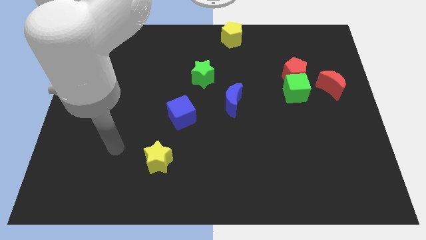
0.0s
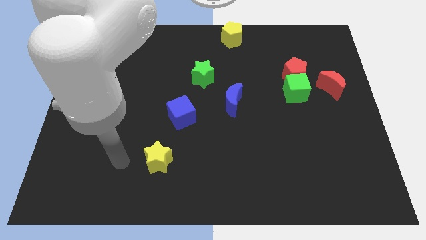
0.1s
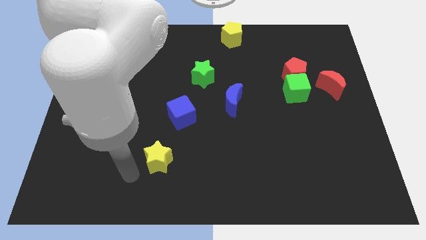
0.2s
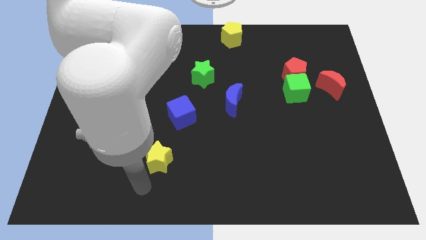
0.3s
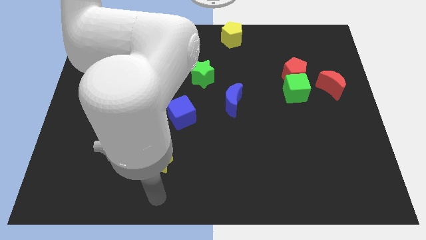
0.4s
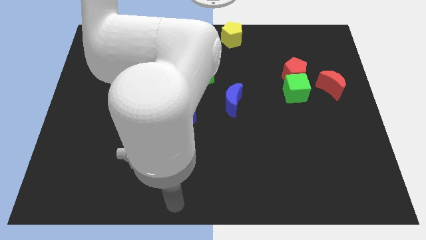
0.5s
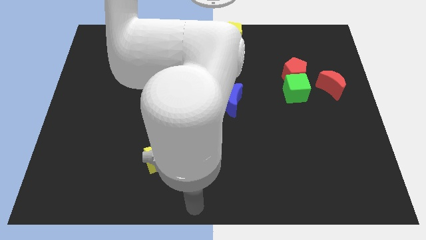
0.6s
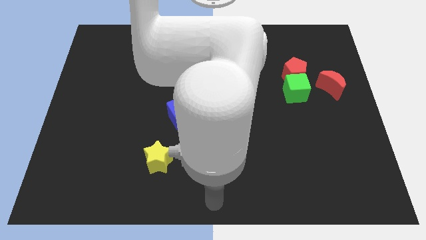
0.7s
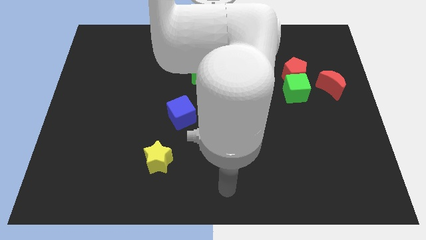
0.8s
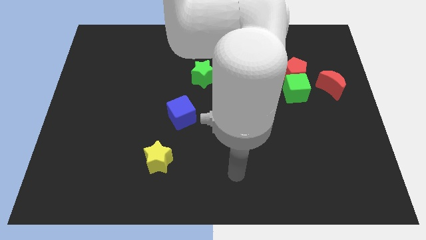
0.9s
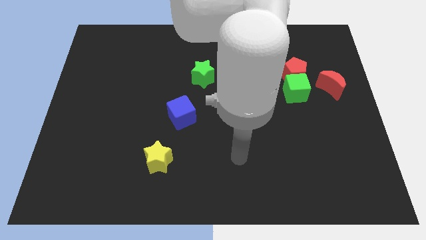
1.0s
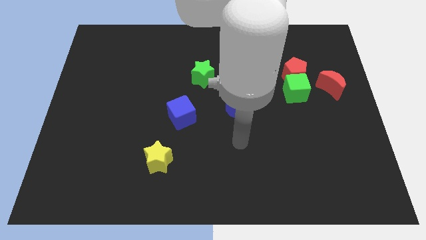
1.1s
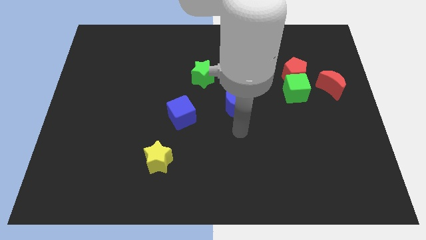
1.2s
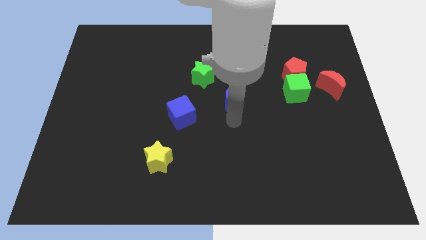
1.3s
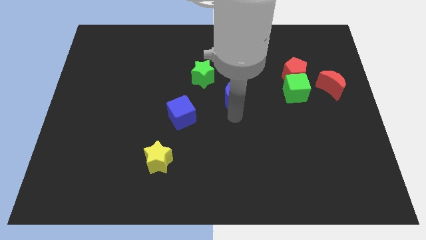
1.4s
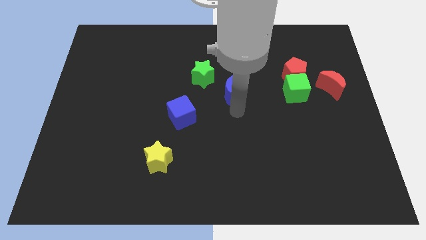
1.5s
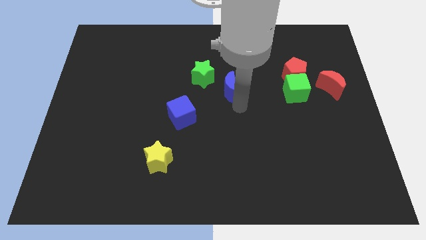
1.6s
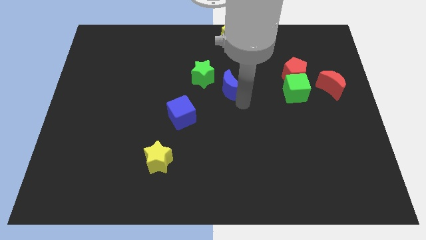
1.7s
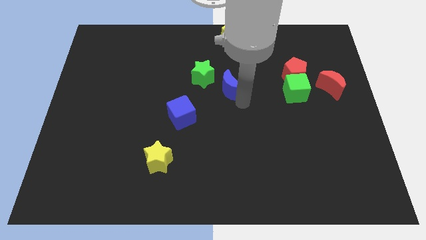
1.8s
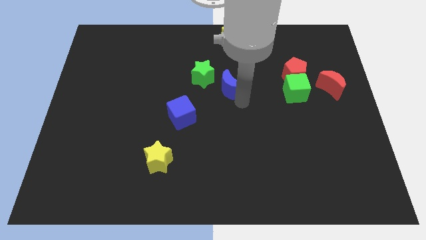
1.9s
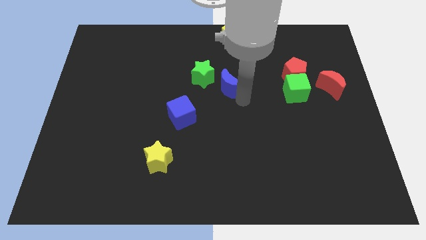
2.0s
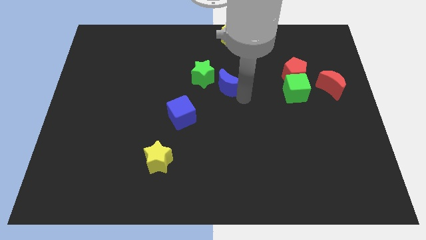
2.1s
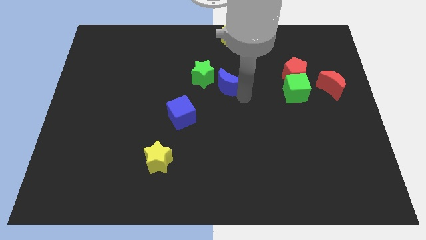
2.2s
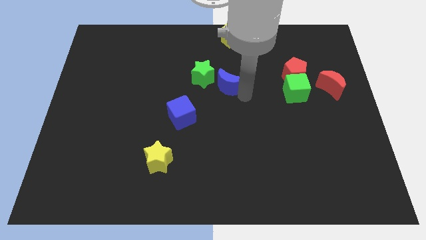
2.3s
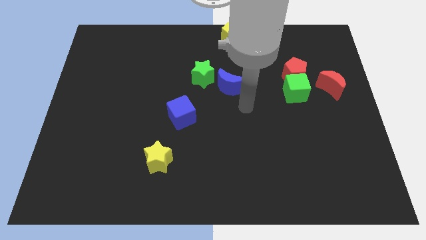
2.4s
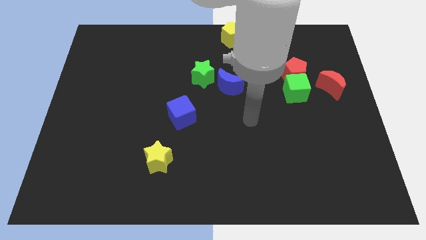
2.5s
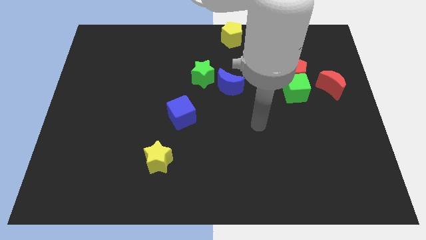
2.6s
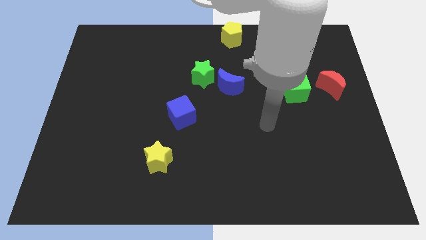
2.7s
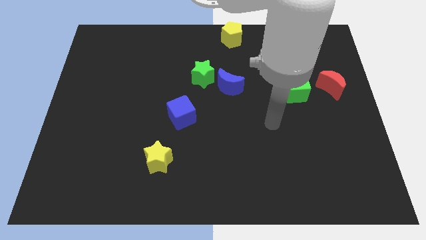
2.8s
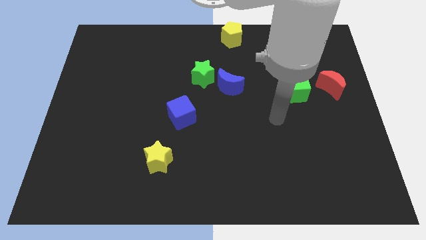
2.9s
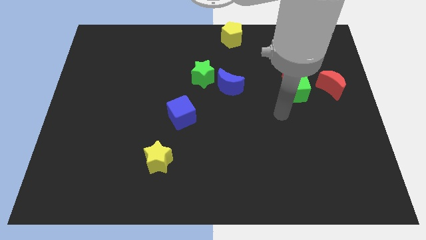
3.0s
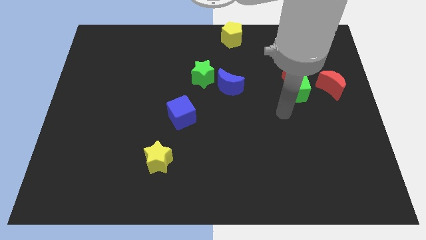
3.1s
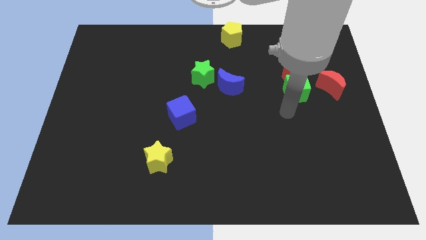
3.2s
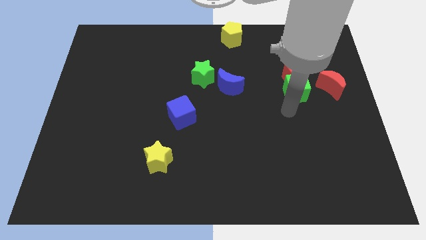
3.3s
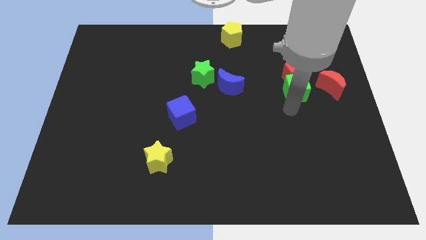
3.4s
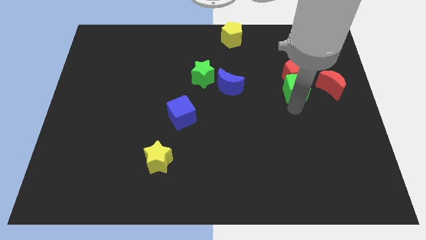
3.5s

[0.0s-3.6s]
place the blue moon parallel to the green star

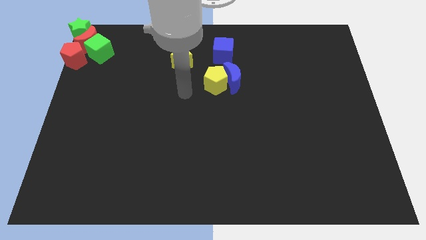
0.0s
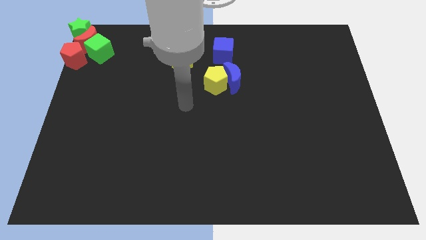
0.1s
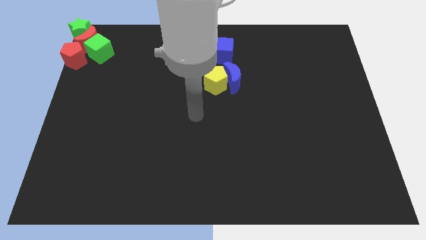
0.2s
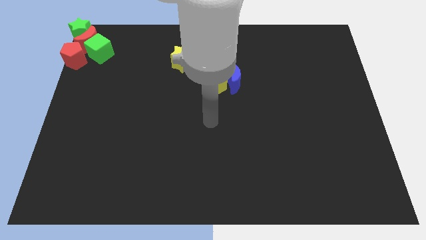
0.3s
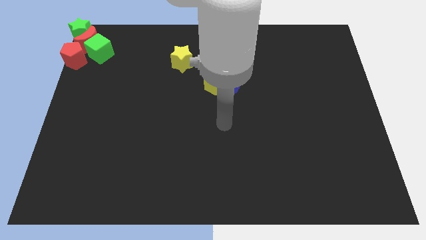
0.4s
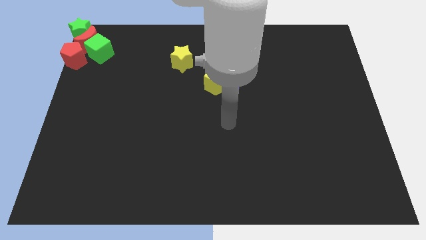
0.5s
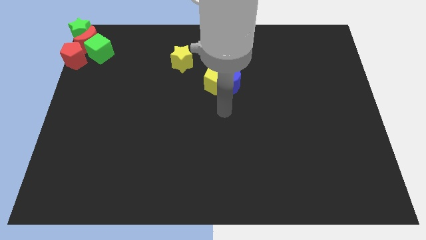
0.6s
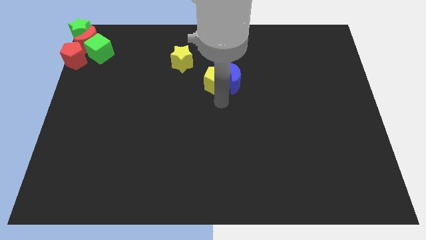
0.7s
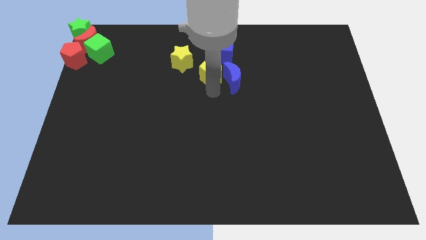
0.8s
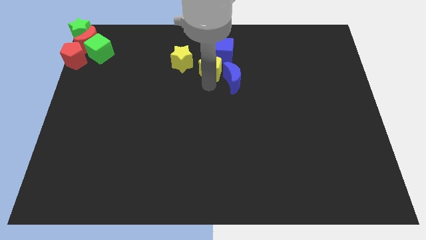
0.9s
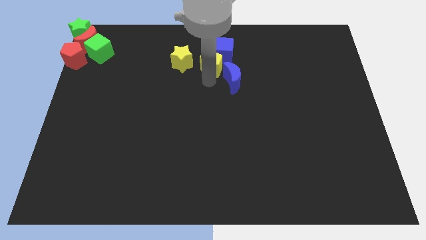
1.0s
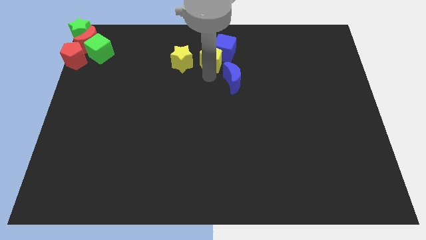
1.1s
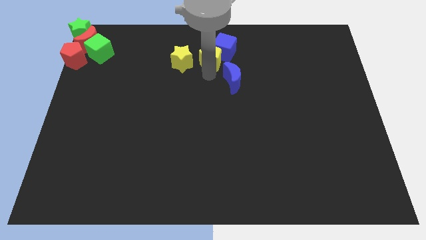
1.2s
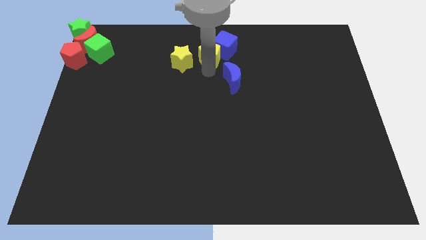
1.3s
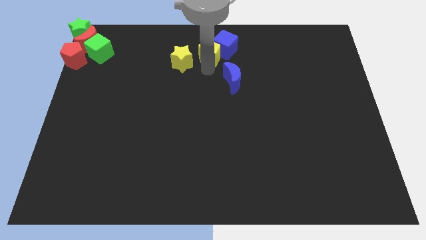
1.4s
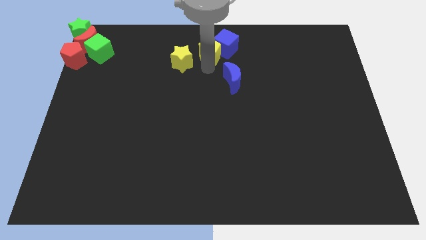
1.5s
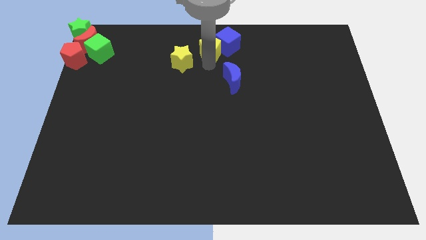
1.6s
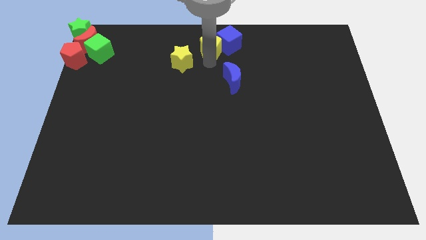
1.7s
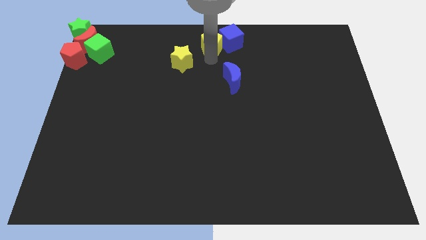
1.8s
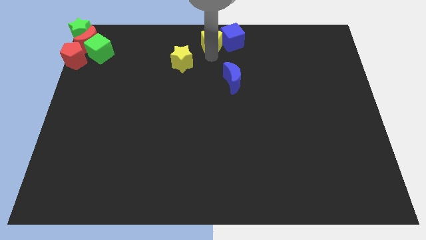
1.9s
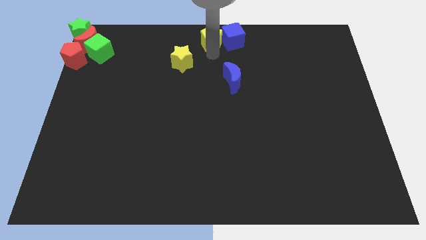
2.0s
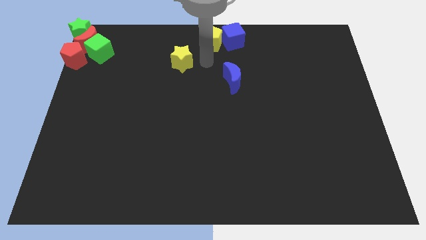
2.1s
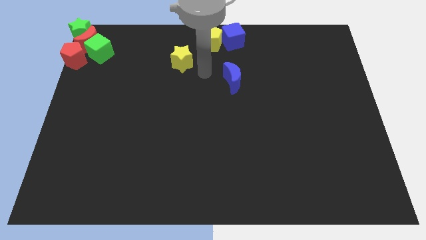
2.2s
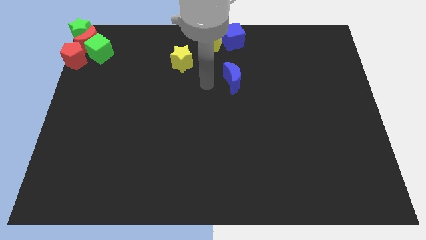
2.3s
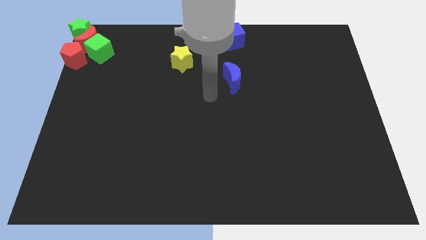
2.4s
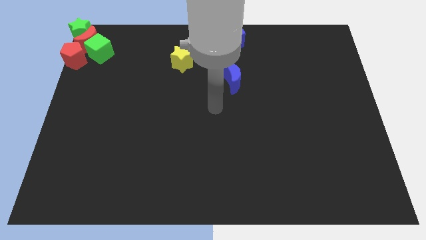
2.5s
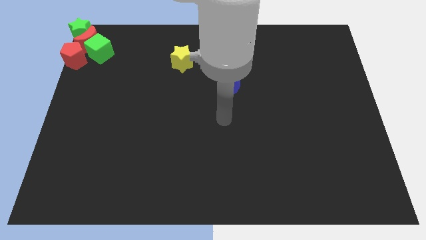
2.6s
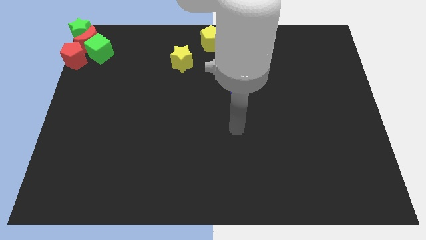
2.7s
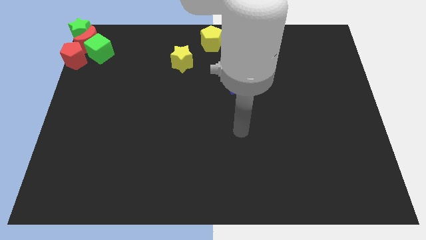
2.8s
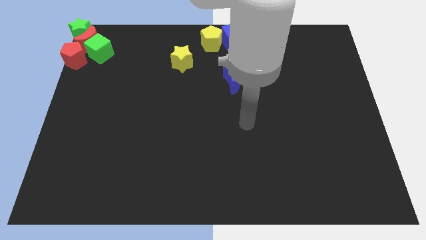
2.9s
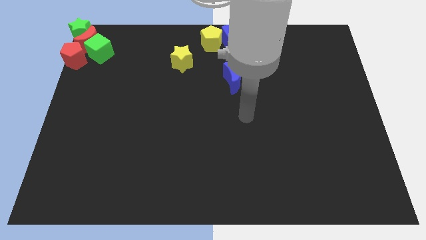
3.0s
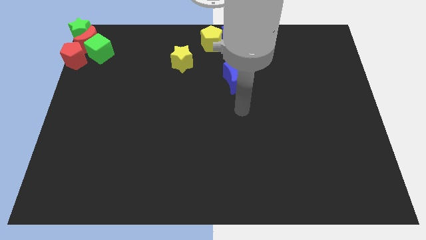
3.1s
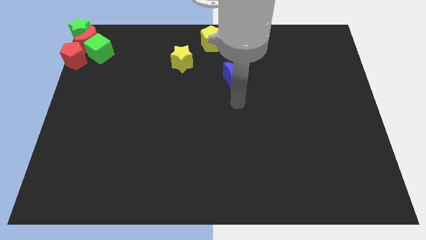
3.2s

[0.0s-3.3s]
move the yellow pentagon along with the blue cube to the top center

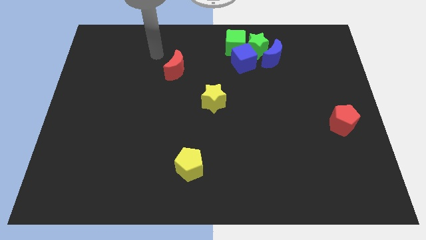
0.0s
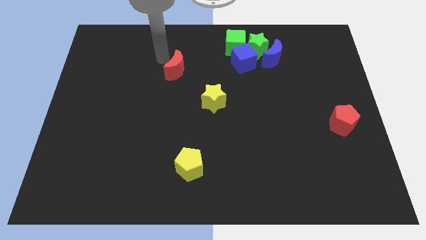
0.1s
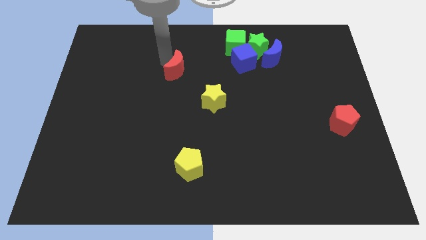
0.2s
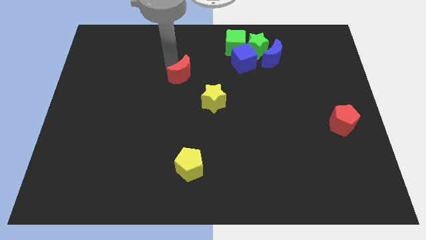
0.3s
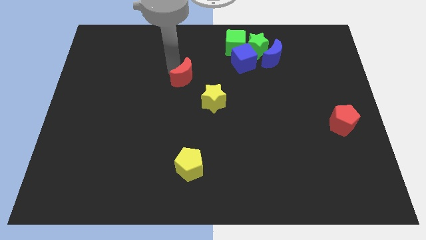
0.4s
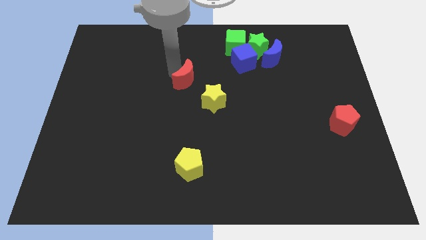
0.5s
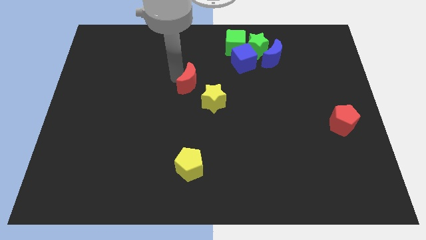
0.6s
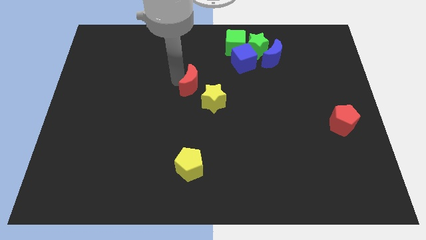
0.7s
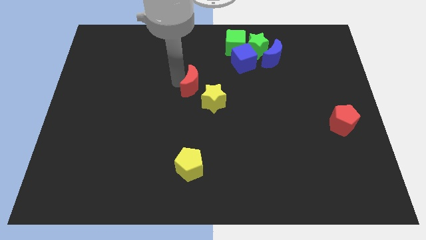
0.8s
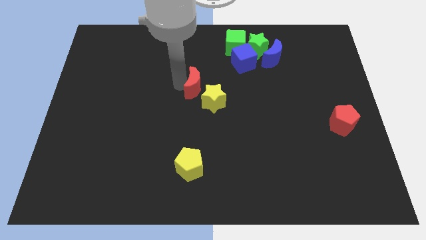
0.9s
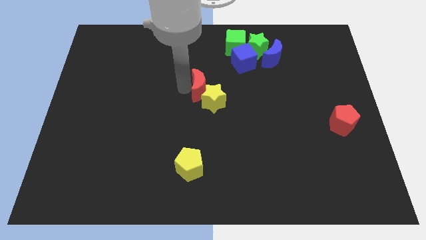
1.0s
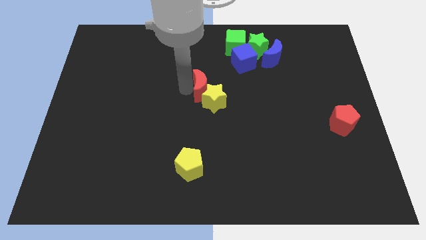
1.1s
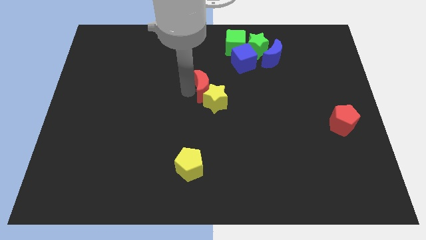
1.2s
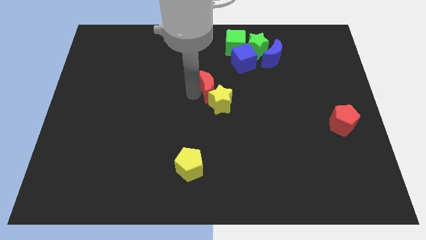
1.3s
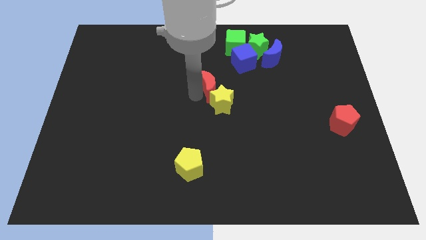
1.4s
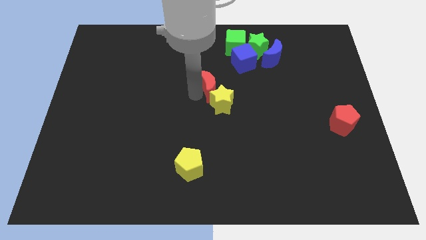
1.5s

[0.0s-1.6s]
move the red moon into the yellow star

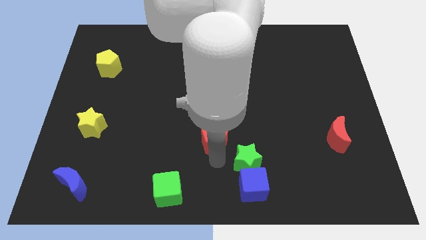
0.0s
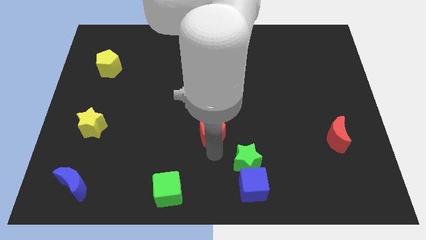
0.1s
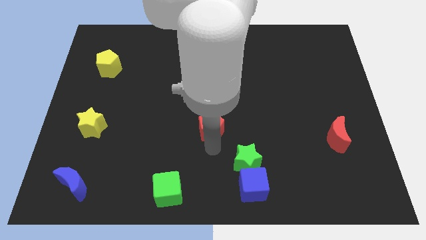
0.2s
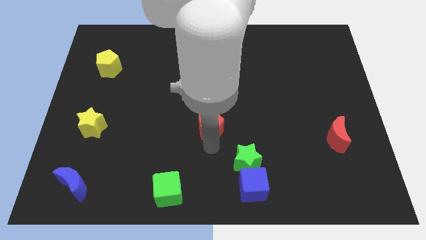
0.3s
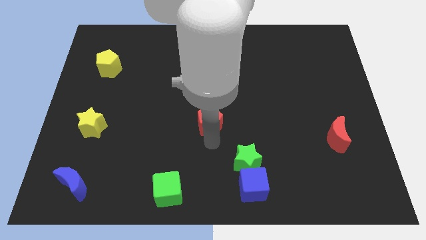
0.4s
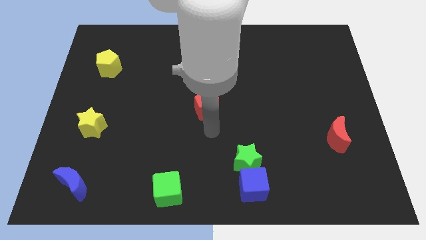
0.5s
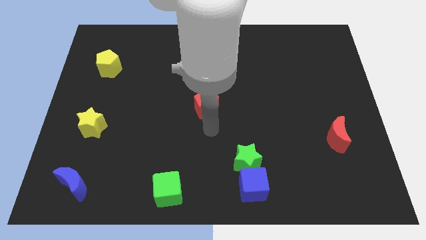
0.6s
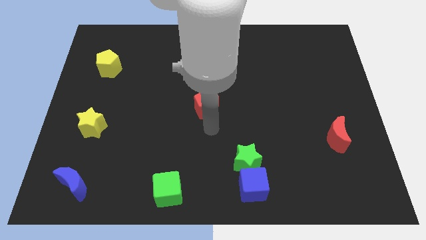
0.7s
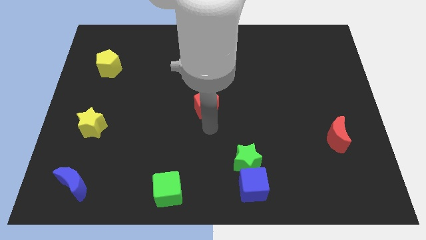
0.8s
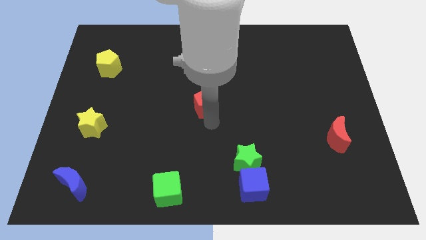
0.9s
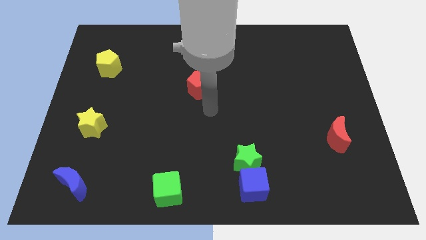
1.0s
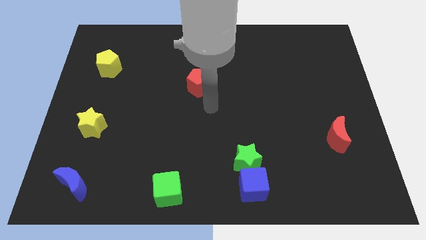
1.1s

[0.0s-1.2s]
place the red pentagon at the center of the board
